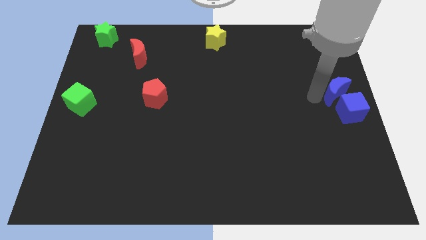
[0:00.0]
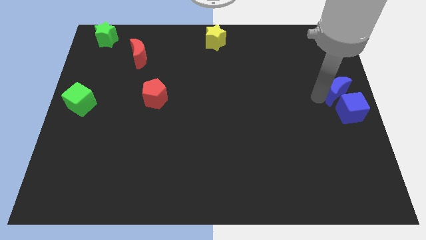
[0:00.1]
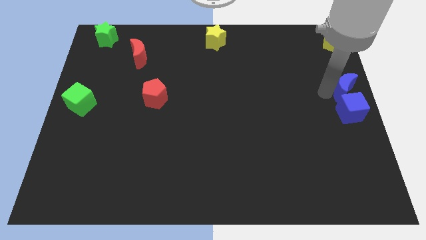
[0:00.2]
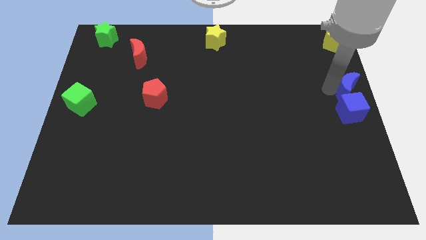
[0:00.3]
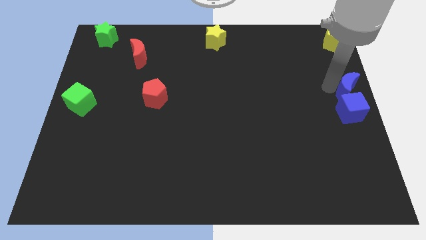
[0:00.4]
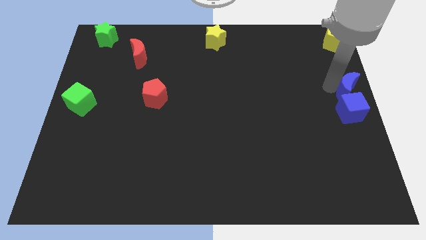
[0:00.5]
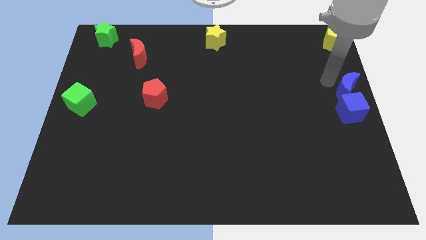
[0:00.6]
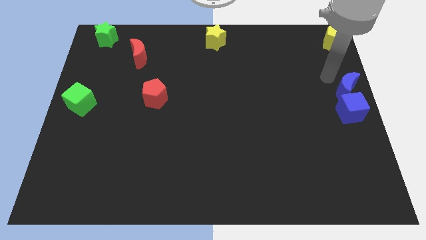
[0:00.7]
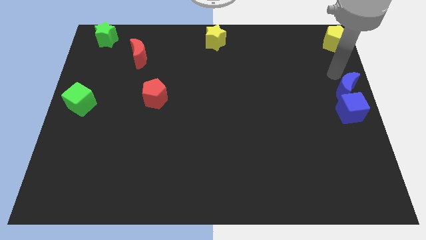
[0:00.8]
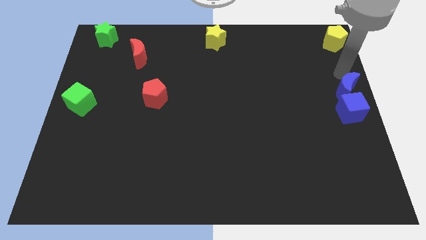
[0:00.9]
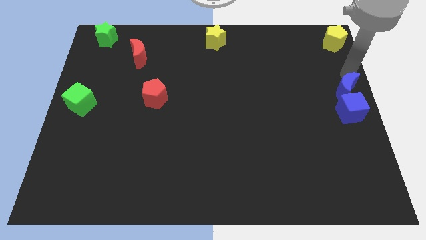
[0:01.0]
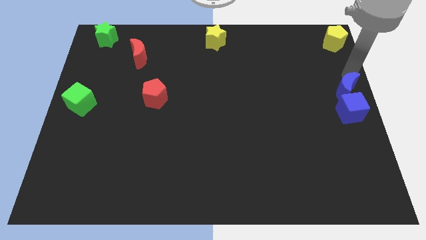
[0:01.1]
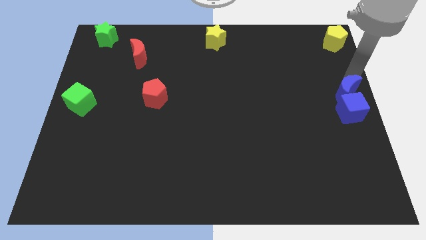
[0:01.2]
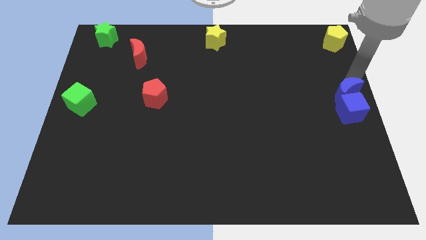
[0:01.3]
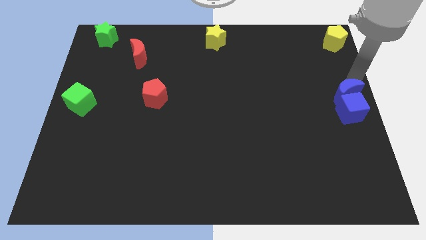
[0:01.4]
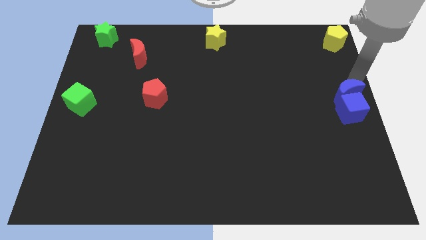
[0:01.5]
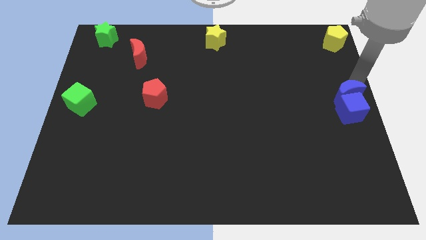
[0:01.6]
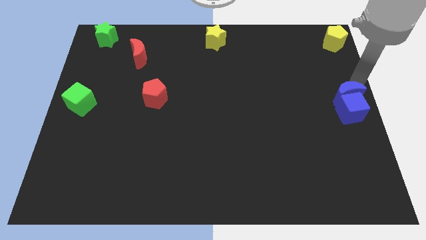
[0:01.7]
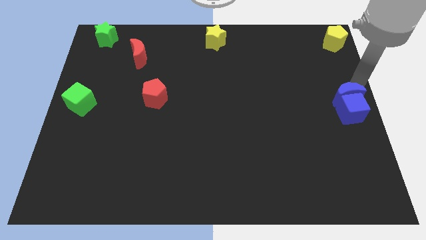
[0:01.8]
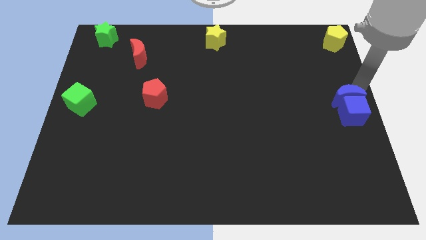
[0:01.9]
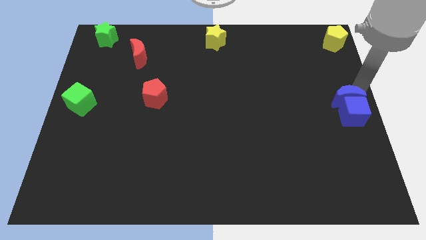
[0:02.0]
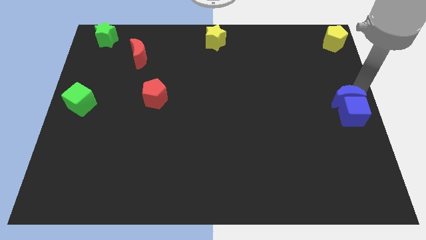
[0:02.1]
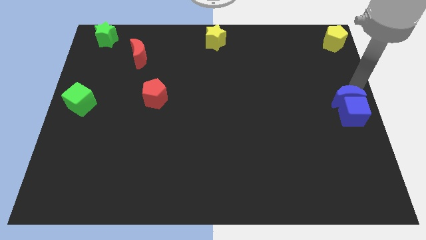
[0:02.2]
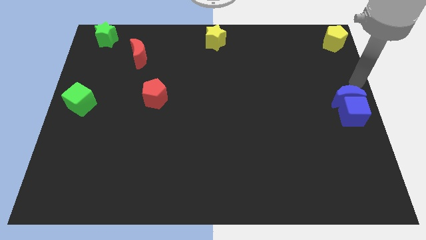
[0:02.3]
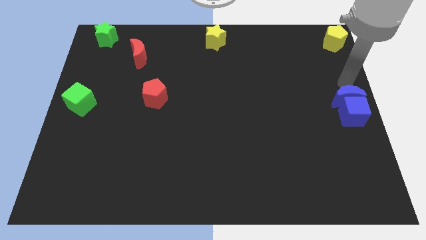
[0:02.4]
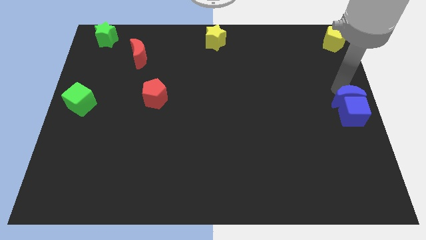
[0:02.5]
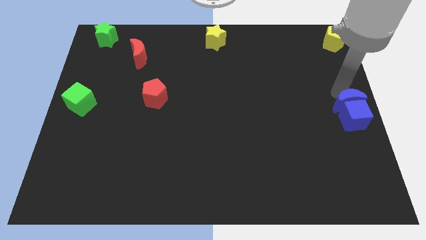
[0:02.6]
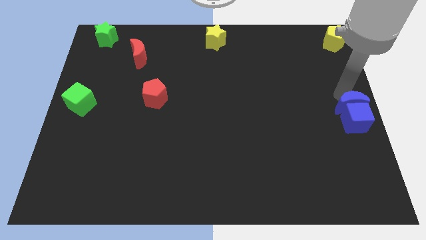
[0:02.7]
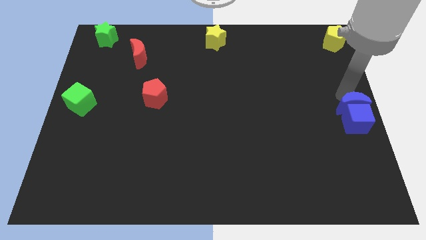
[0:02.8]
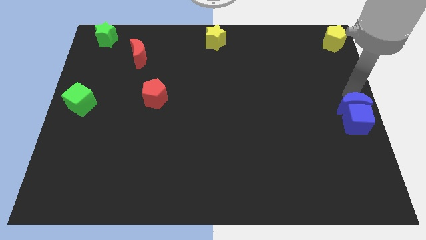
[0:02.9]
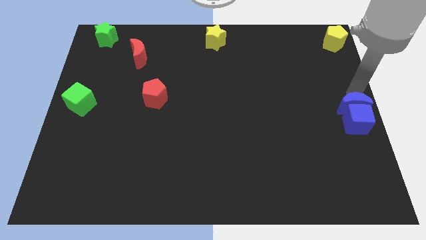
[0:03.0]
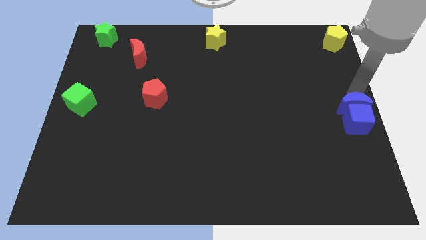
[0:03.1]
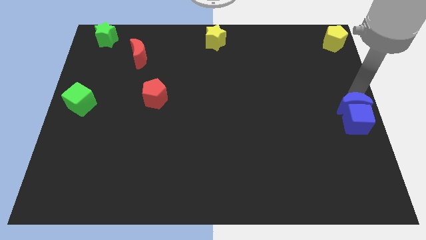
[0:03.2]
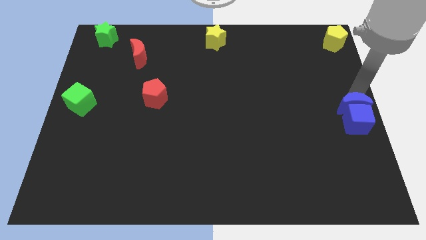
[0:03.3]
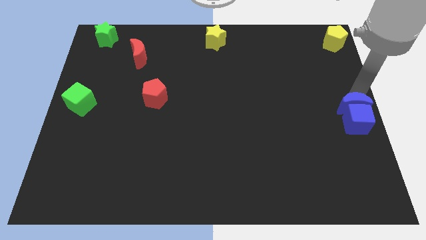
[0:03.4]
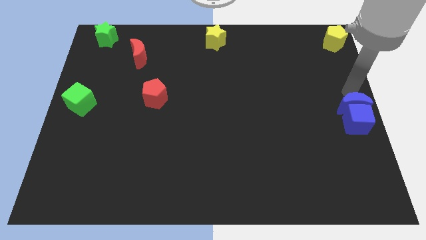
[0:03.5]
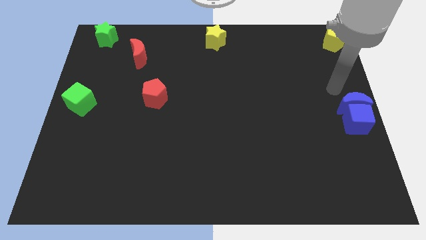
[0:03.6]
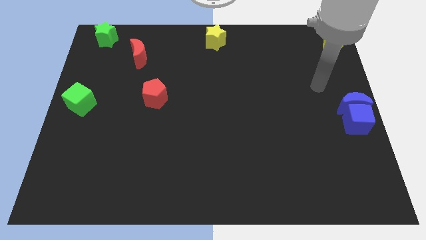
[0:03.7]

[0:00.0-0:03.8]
push the blue crescent into the blue cube

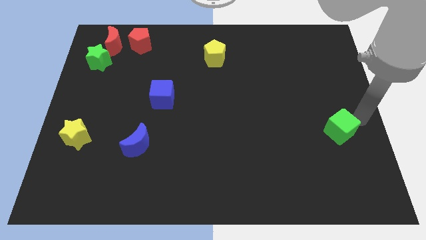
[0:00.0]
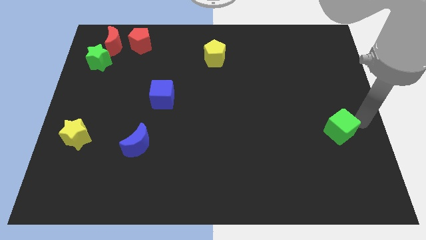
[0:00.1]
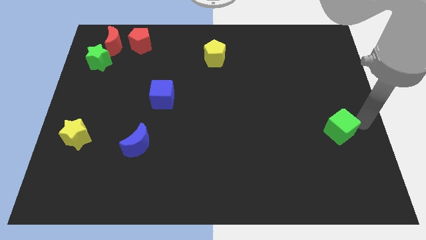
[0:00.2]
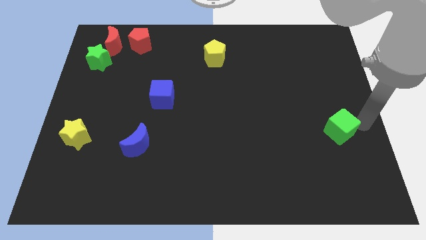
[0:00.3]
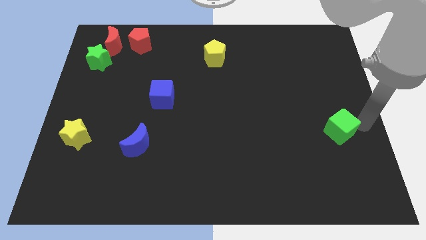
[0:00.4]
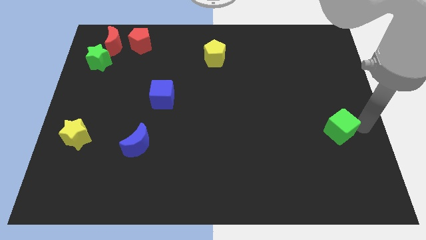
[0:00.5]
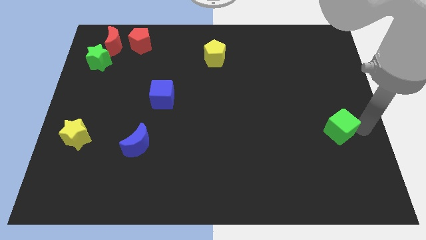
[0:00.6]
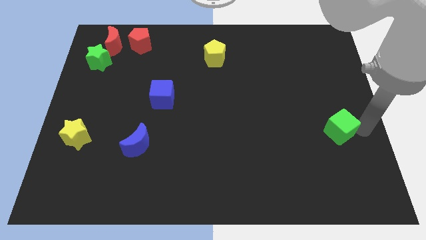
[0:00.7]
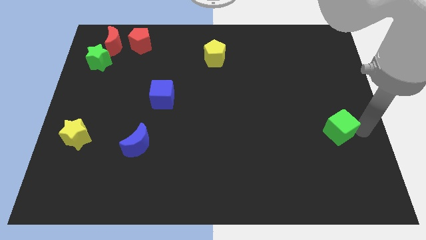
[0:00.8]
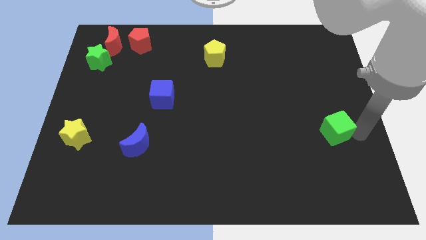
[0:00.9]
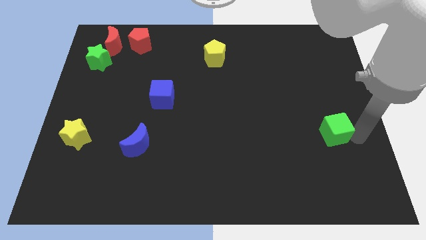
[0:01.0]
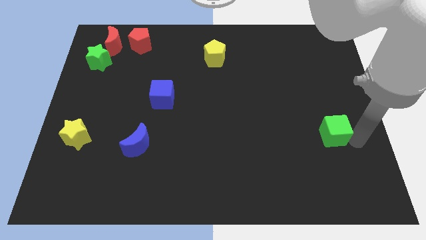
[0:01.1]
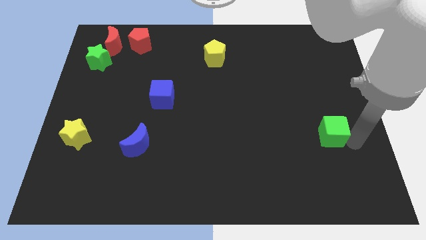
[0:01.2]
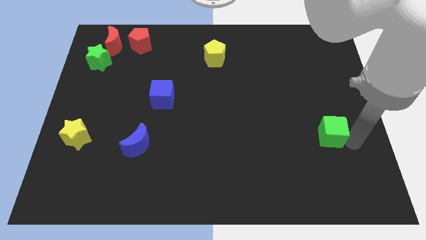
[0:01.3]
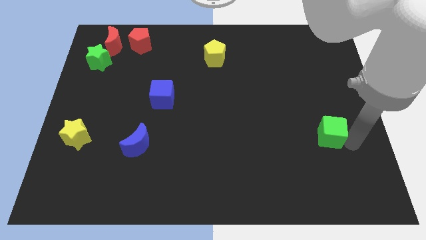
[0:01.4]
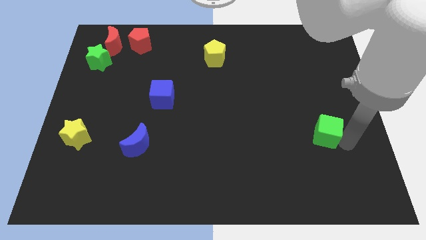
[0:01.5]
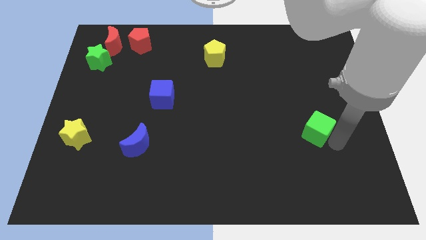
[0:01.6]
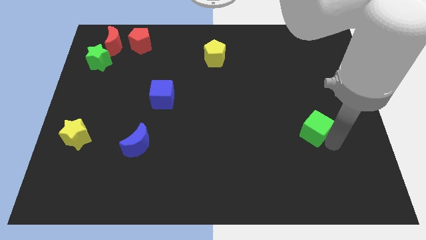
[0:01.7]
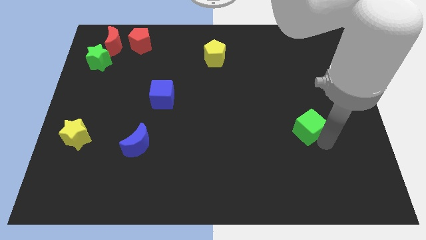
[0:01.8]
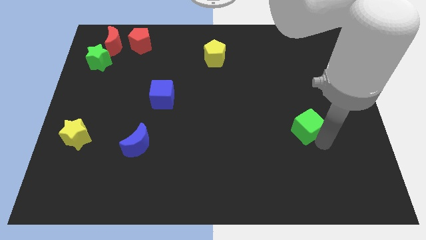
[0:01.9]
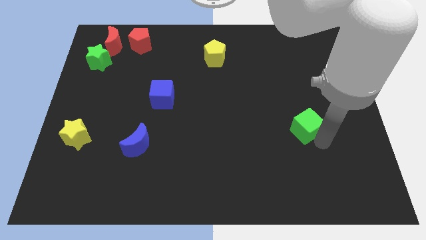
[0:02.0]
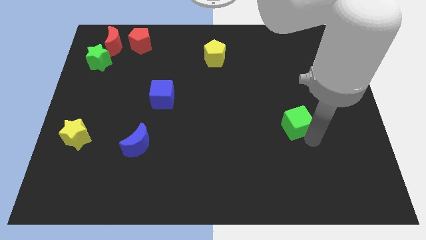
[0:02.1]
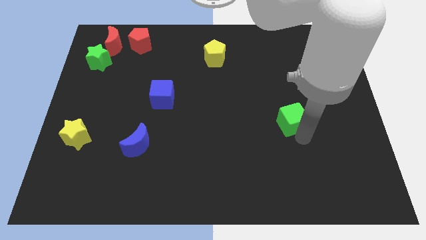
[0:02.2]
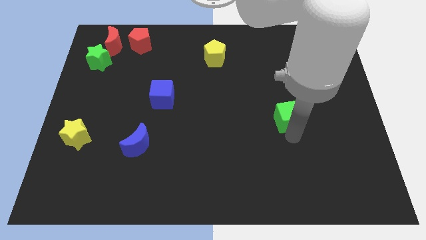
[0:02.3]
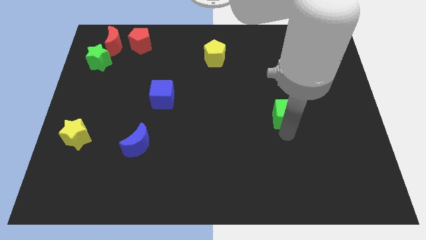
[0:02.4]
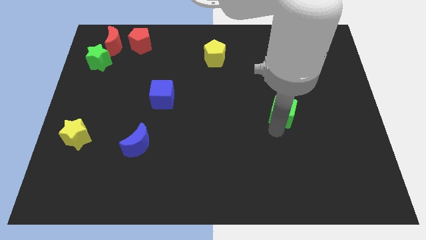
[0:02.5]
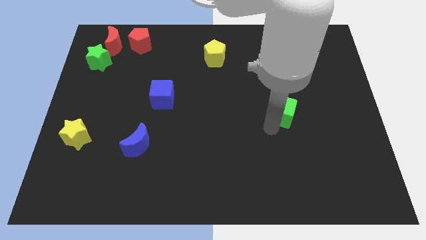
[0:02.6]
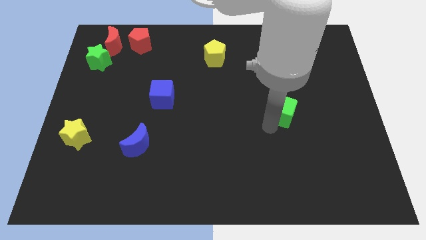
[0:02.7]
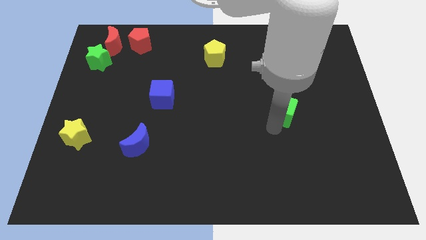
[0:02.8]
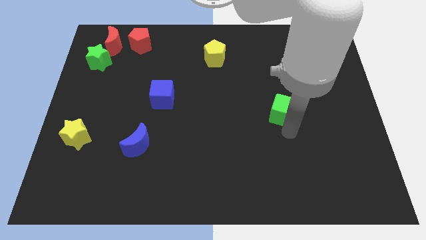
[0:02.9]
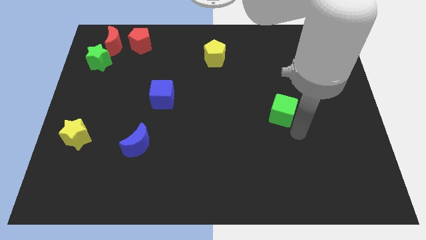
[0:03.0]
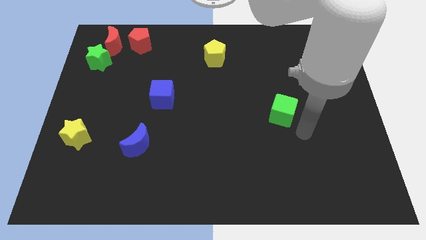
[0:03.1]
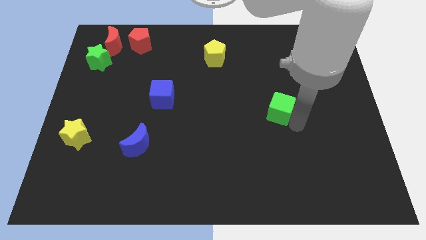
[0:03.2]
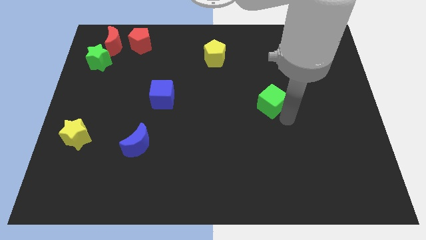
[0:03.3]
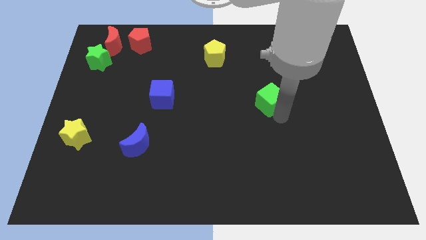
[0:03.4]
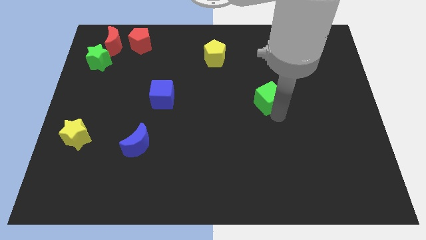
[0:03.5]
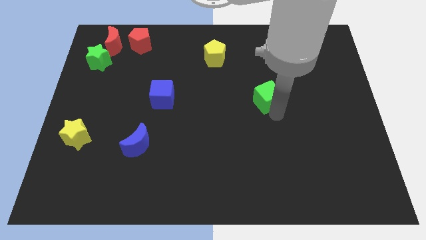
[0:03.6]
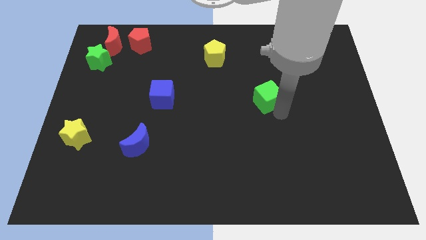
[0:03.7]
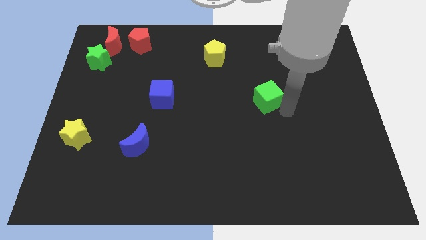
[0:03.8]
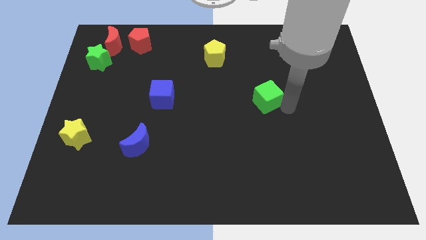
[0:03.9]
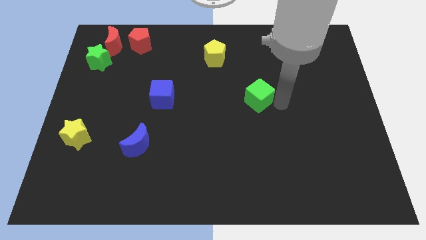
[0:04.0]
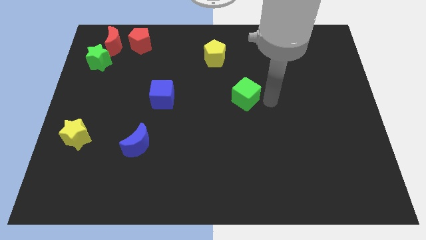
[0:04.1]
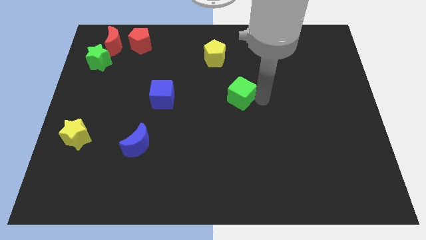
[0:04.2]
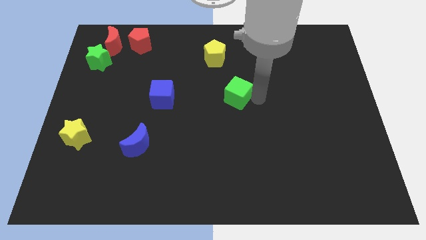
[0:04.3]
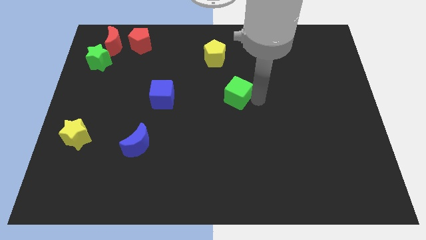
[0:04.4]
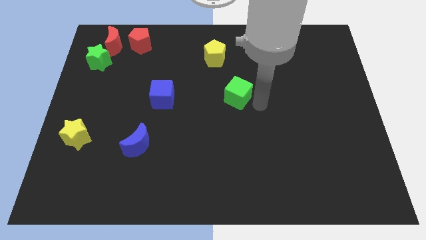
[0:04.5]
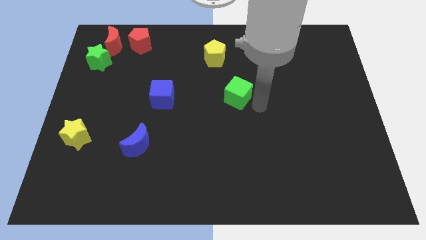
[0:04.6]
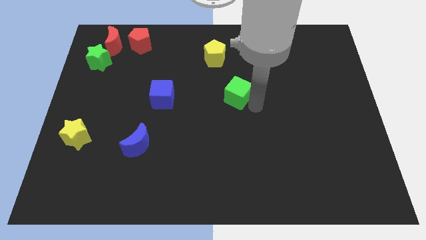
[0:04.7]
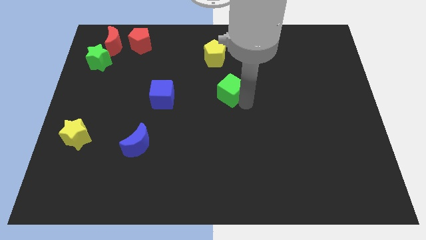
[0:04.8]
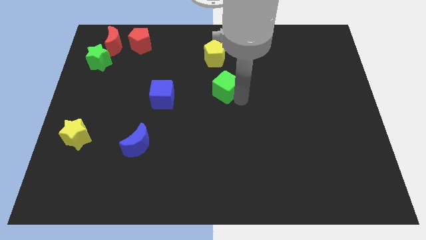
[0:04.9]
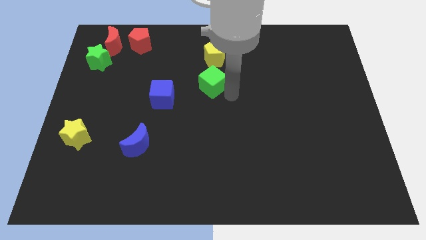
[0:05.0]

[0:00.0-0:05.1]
place the green cube vertically below the yellow pentagon
